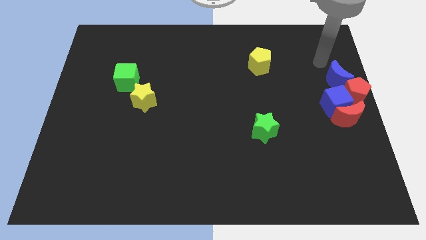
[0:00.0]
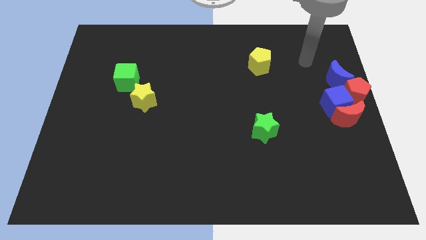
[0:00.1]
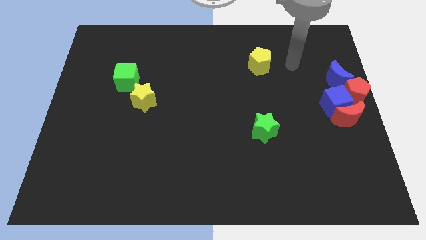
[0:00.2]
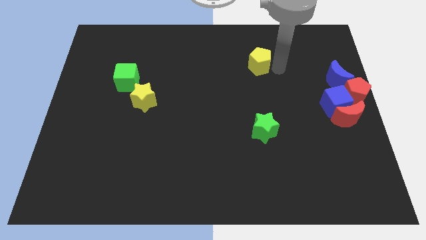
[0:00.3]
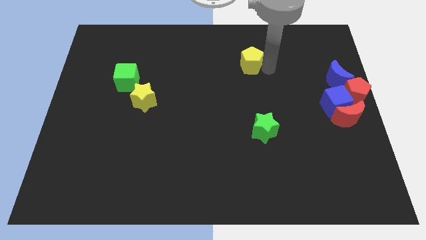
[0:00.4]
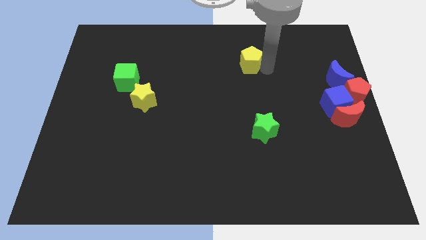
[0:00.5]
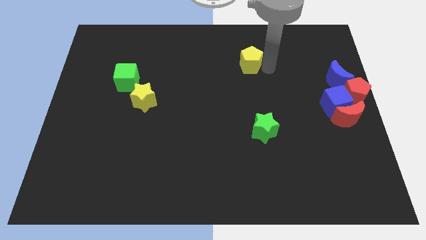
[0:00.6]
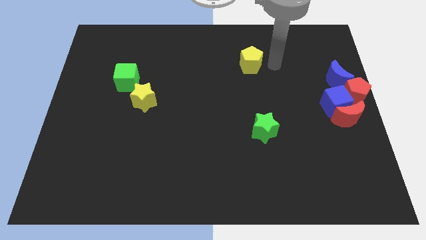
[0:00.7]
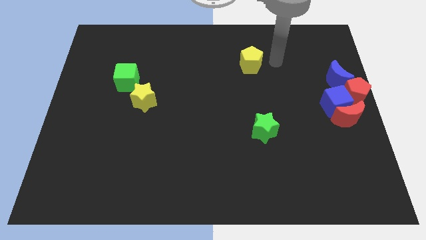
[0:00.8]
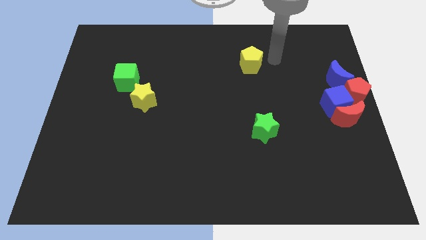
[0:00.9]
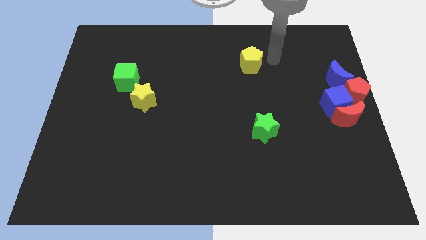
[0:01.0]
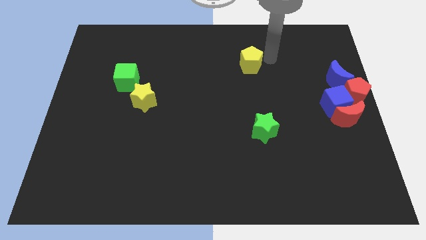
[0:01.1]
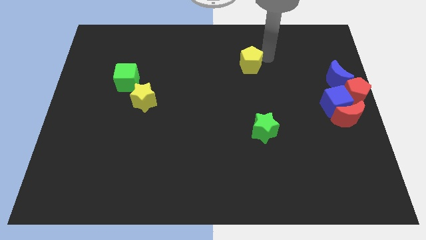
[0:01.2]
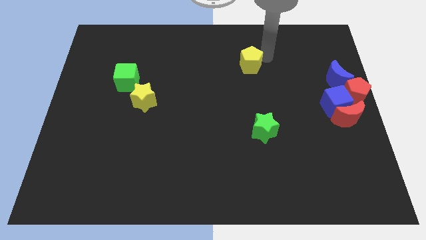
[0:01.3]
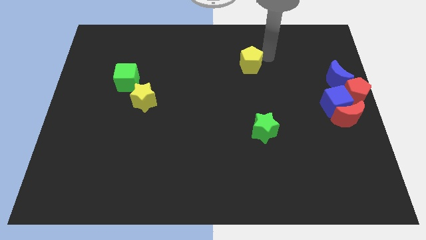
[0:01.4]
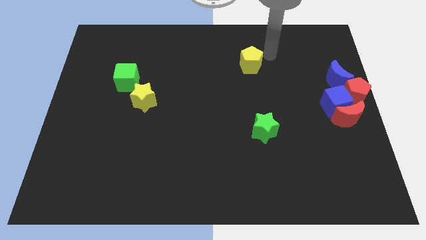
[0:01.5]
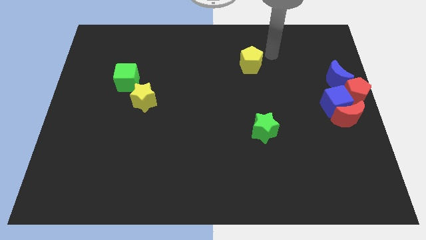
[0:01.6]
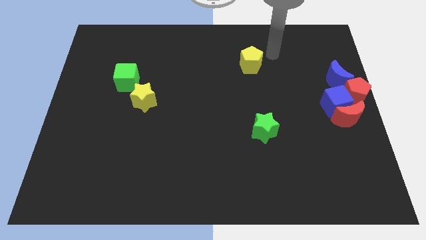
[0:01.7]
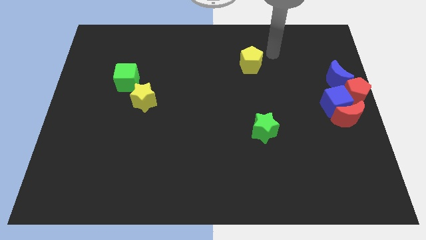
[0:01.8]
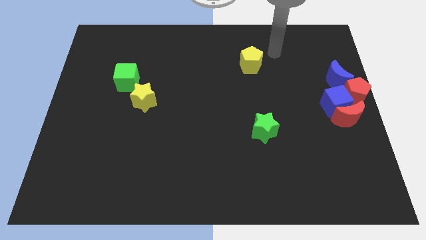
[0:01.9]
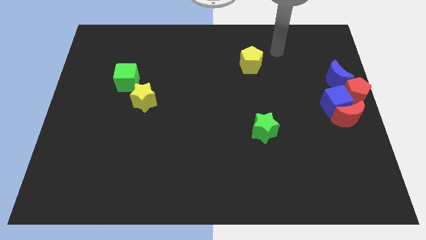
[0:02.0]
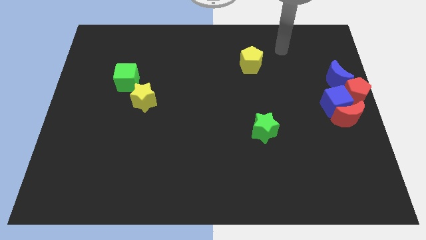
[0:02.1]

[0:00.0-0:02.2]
gently touch the right side of the yellow pentagon

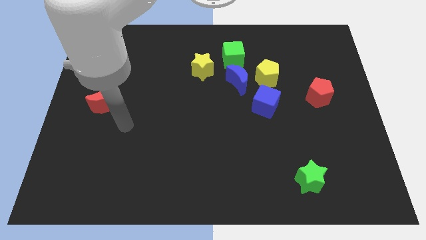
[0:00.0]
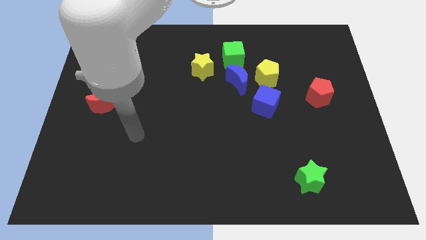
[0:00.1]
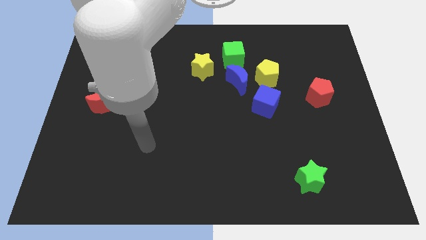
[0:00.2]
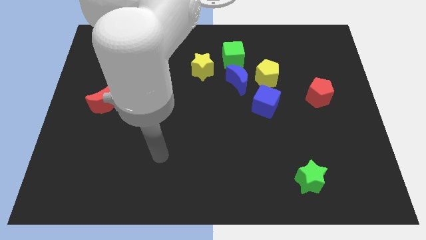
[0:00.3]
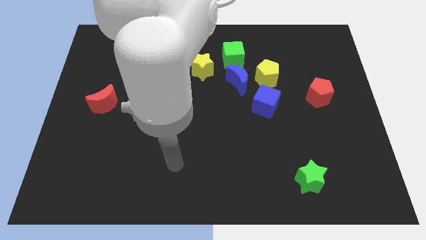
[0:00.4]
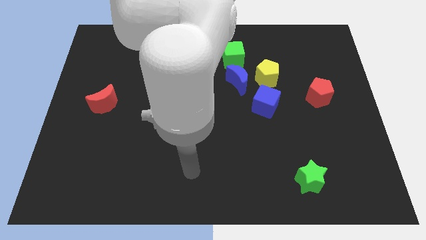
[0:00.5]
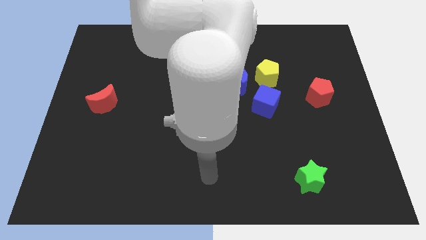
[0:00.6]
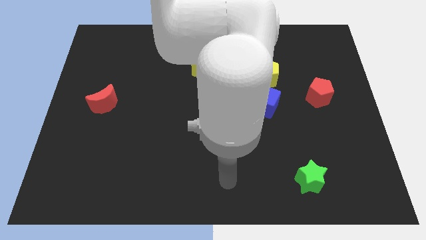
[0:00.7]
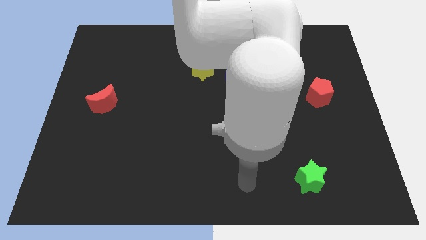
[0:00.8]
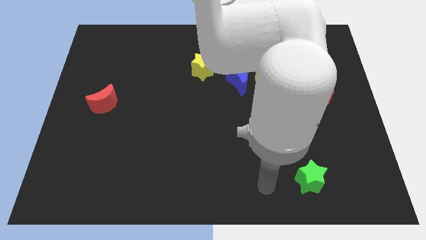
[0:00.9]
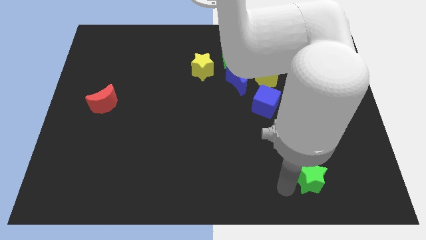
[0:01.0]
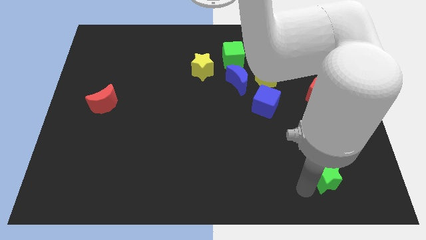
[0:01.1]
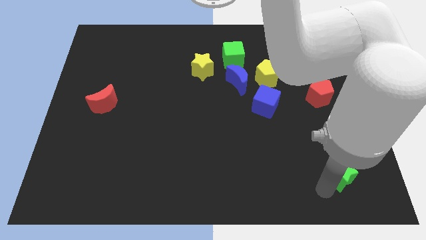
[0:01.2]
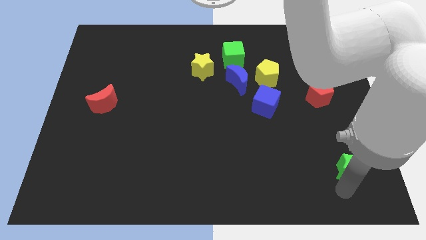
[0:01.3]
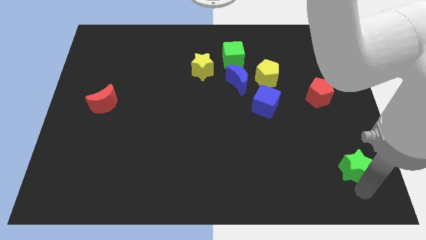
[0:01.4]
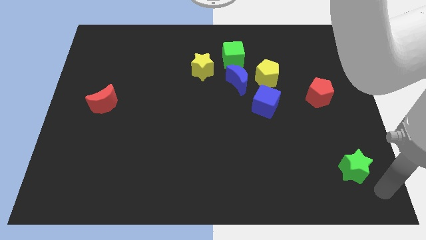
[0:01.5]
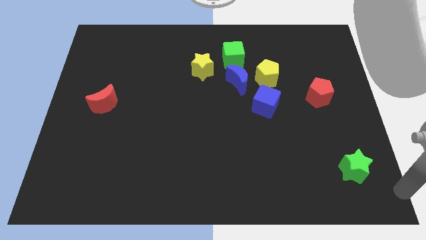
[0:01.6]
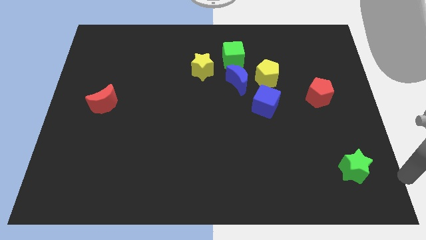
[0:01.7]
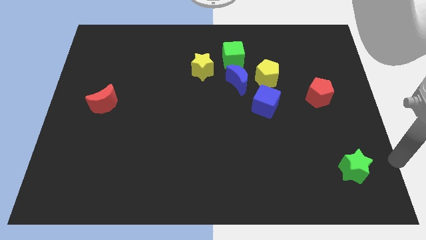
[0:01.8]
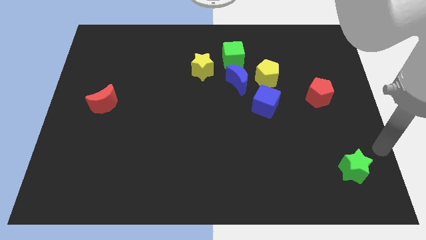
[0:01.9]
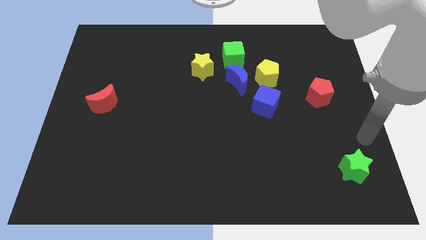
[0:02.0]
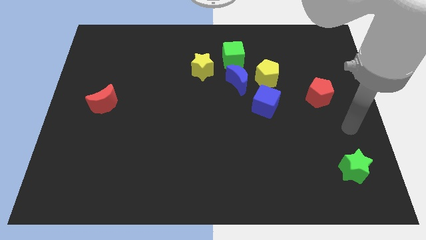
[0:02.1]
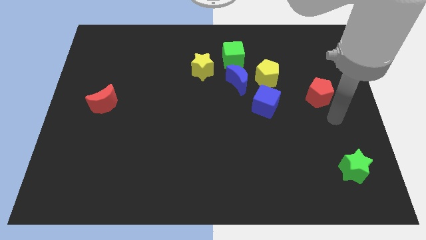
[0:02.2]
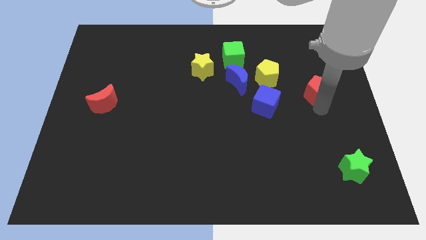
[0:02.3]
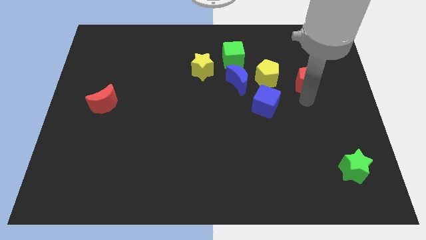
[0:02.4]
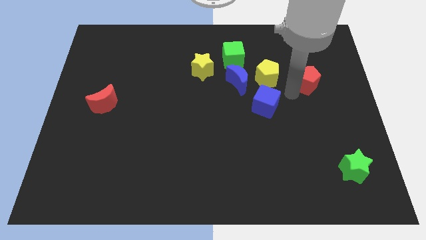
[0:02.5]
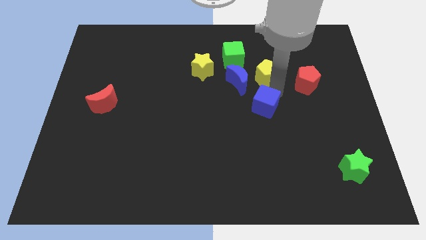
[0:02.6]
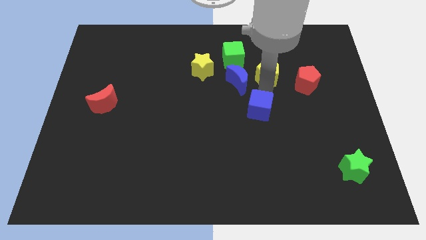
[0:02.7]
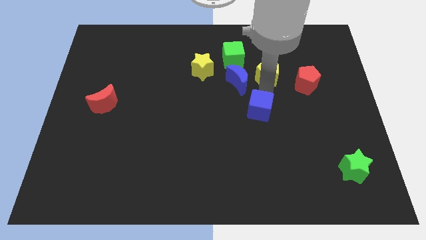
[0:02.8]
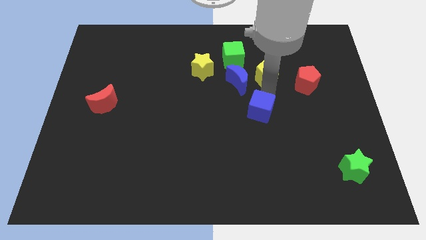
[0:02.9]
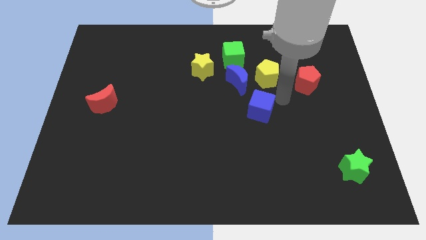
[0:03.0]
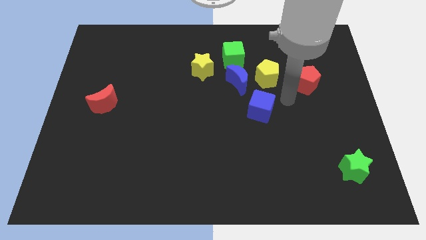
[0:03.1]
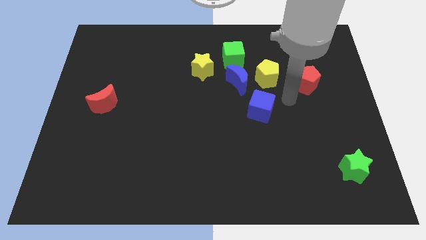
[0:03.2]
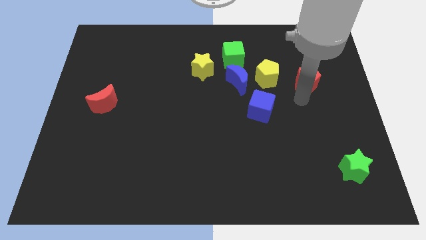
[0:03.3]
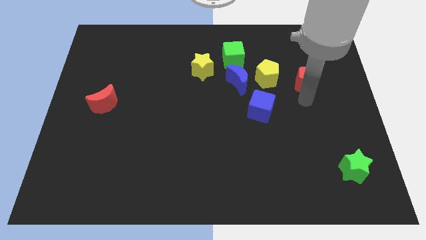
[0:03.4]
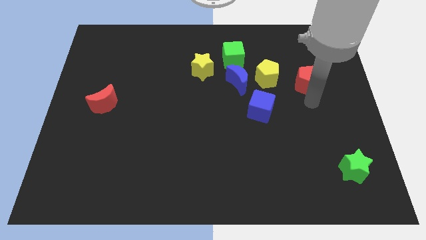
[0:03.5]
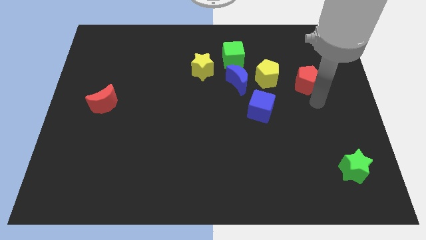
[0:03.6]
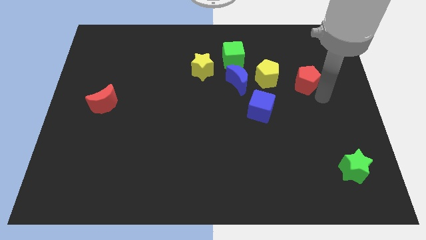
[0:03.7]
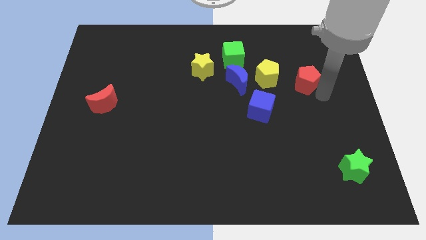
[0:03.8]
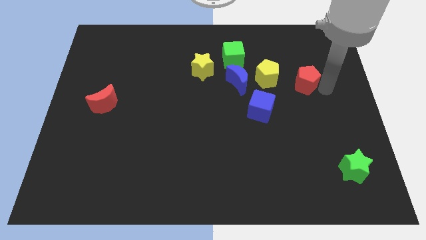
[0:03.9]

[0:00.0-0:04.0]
touch the green star and red pentagon and blue cube

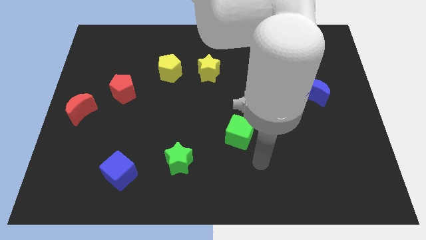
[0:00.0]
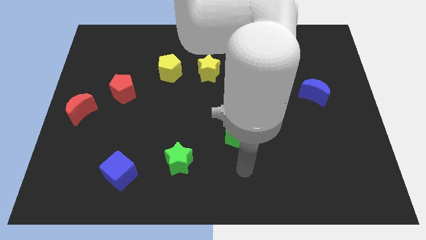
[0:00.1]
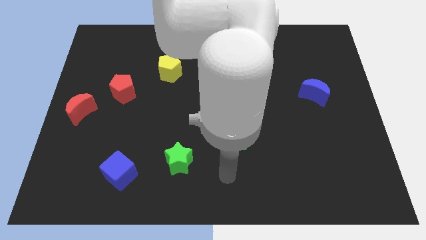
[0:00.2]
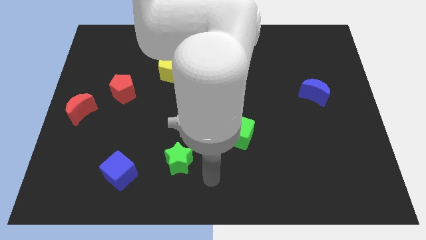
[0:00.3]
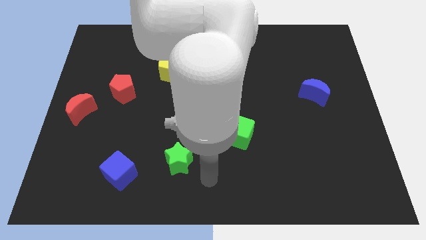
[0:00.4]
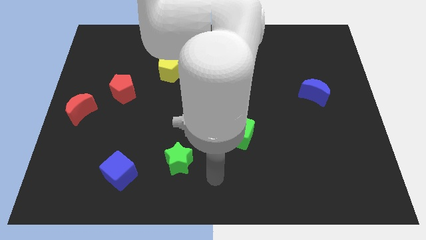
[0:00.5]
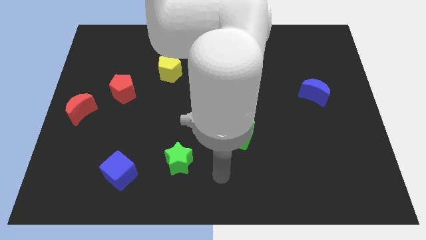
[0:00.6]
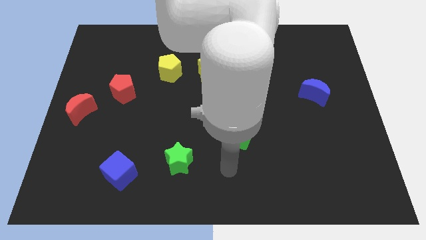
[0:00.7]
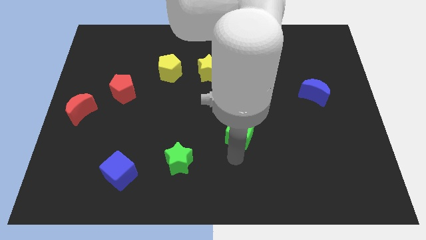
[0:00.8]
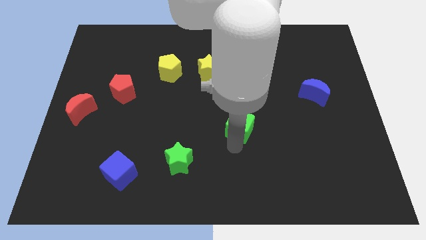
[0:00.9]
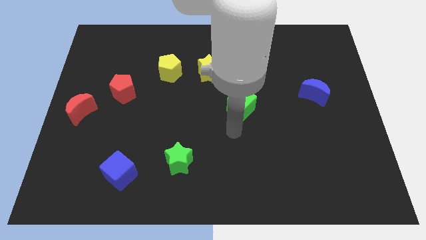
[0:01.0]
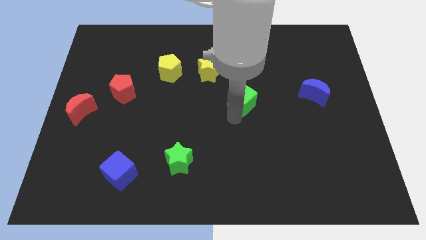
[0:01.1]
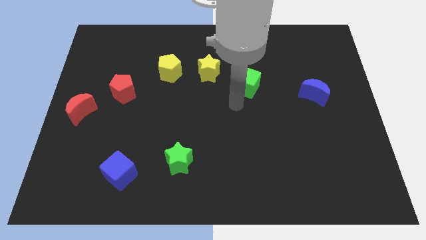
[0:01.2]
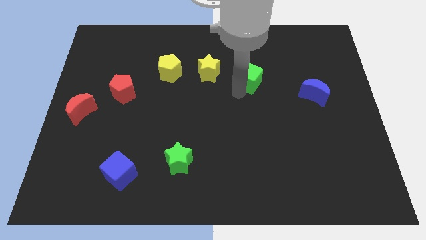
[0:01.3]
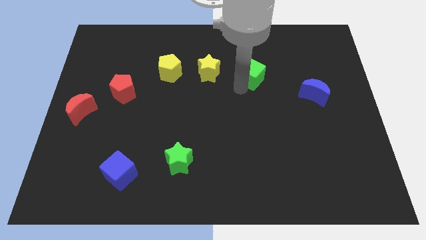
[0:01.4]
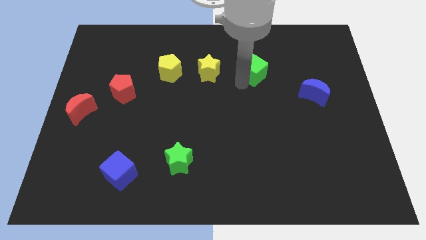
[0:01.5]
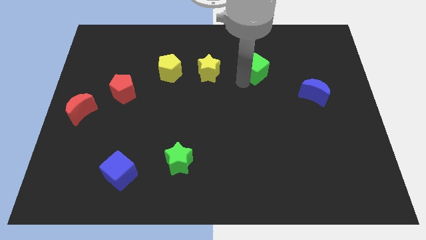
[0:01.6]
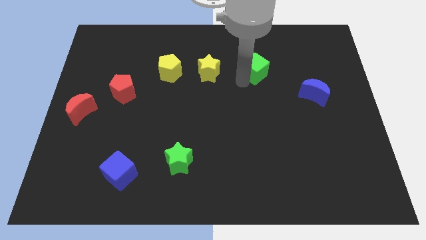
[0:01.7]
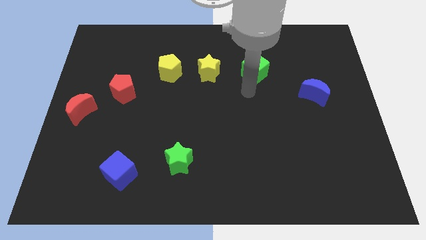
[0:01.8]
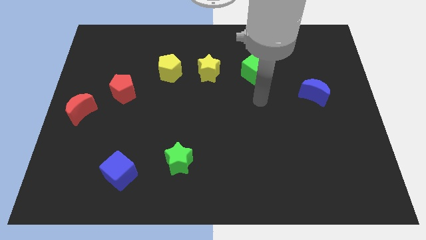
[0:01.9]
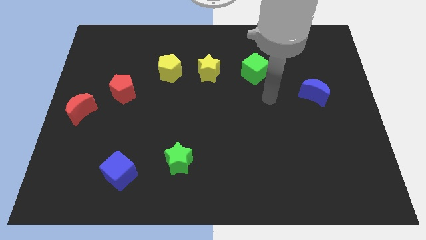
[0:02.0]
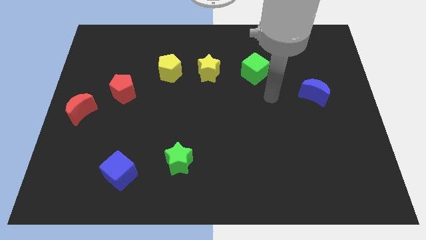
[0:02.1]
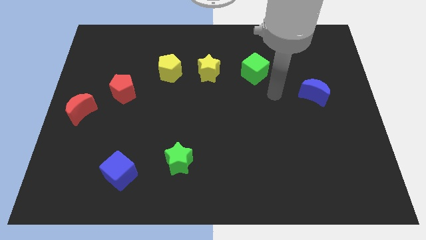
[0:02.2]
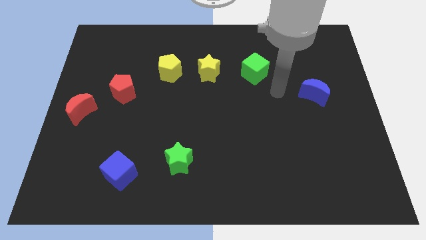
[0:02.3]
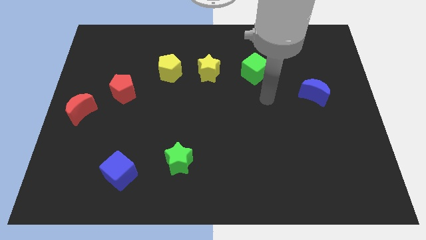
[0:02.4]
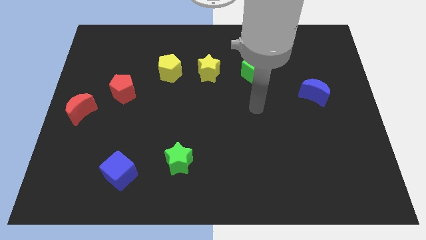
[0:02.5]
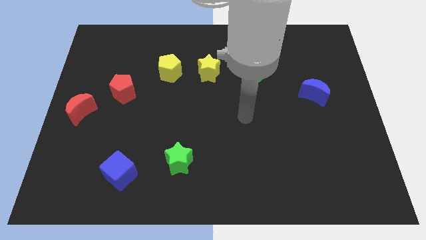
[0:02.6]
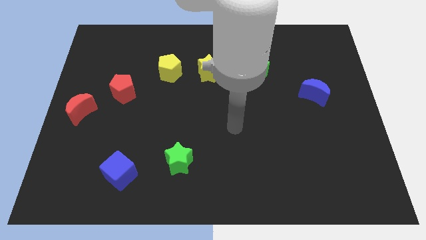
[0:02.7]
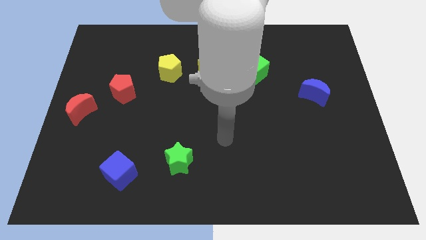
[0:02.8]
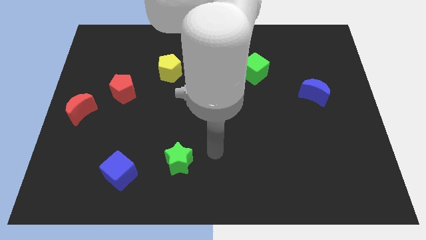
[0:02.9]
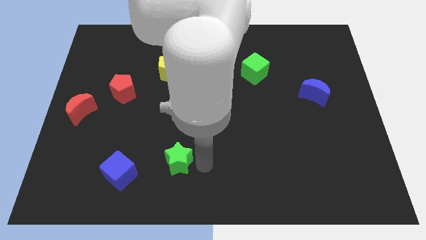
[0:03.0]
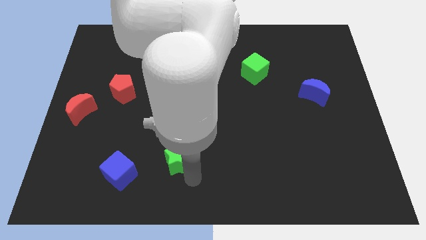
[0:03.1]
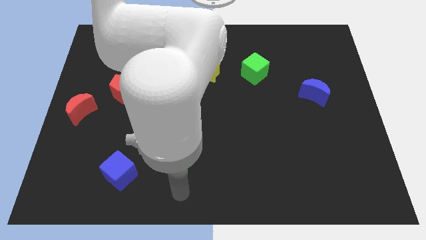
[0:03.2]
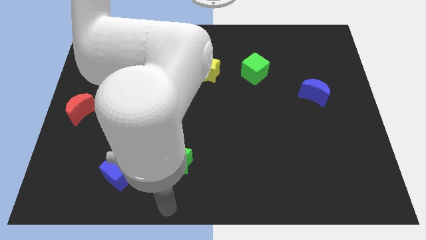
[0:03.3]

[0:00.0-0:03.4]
place the green cube to the right of the yellow star
